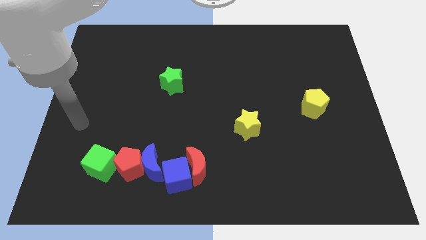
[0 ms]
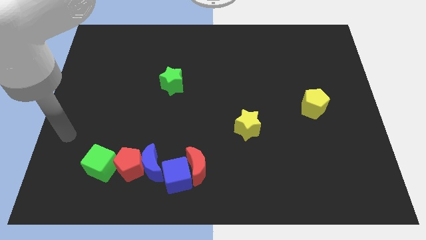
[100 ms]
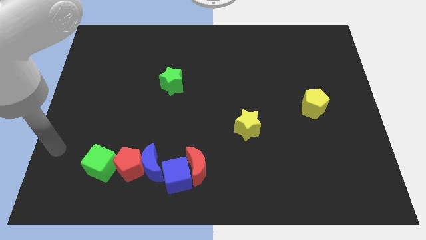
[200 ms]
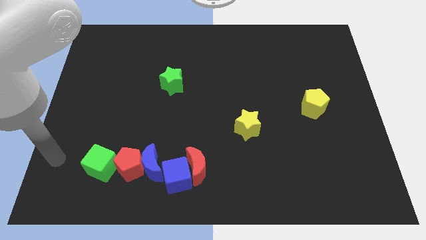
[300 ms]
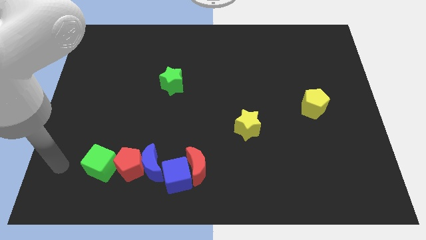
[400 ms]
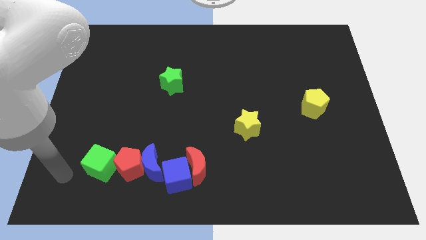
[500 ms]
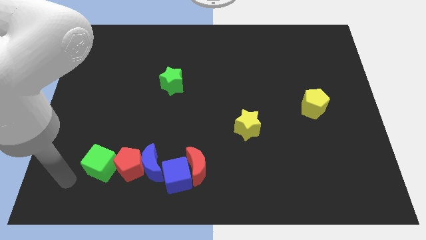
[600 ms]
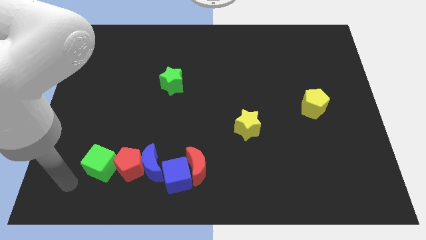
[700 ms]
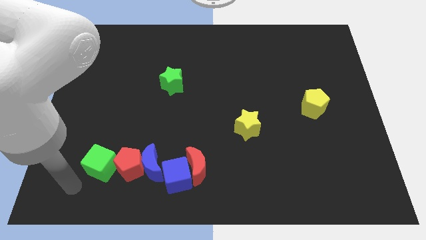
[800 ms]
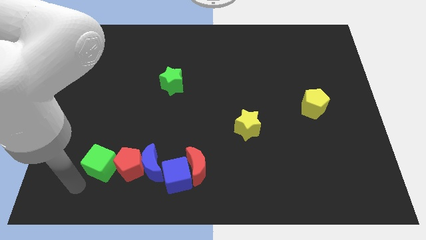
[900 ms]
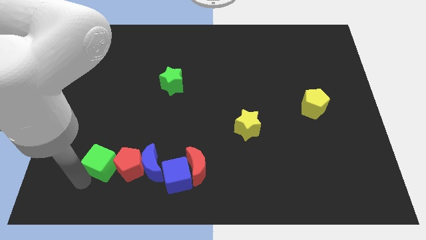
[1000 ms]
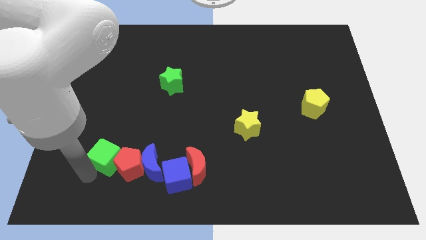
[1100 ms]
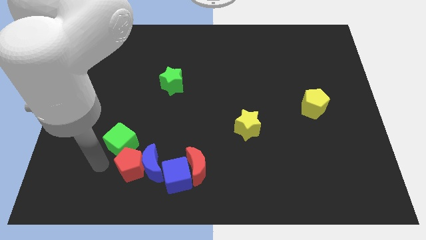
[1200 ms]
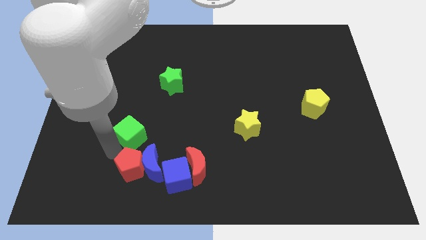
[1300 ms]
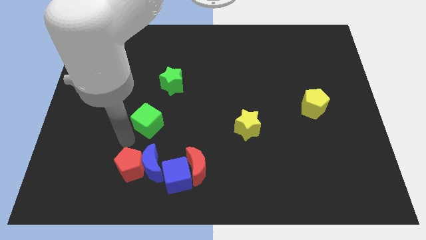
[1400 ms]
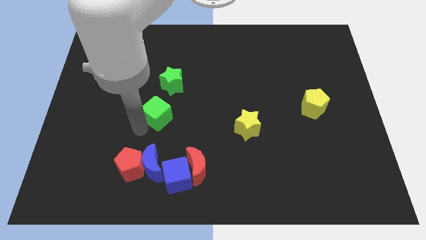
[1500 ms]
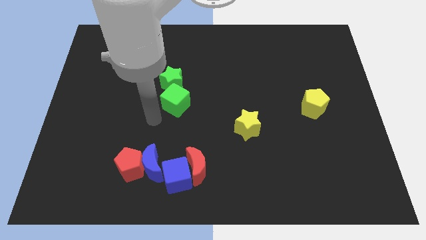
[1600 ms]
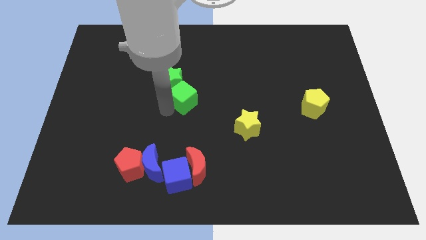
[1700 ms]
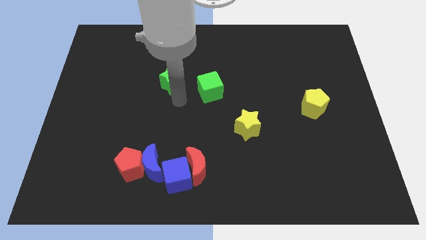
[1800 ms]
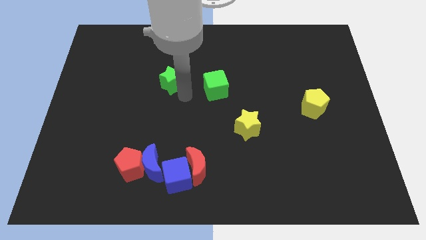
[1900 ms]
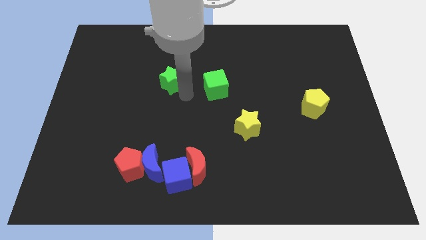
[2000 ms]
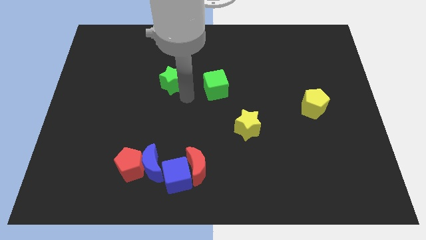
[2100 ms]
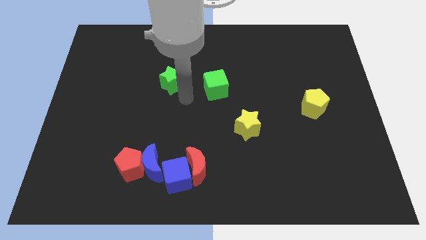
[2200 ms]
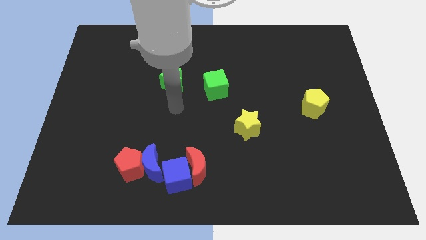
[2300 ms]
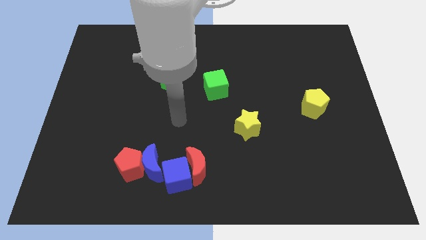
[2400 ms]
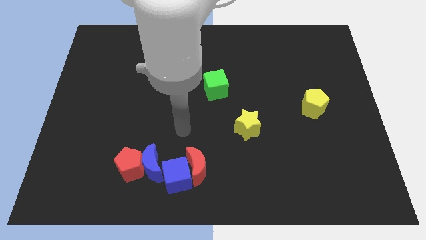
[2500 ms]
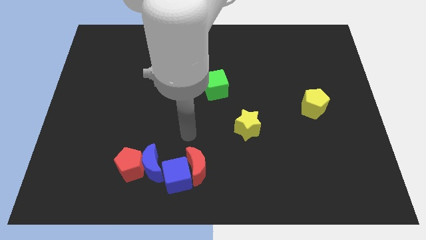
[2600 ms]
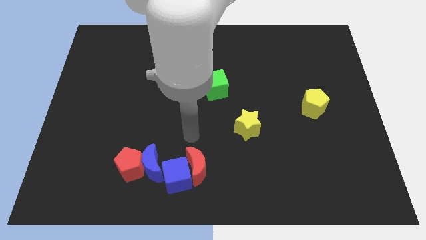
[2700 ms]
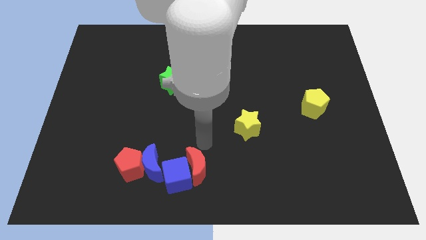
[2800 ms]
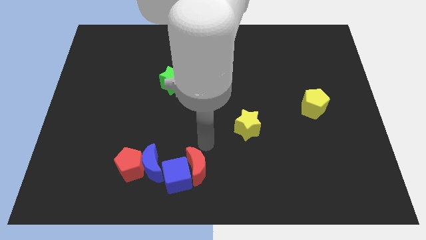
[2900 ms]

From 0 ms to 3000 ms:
move the green cube to the right of the green star

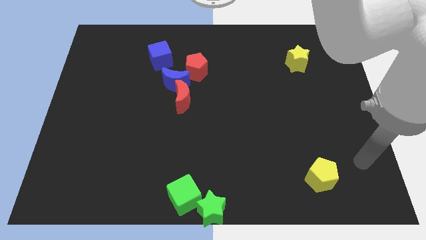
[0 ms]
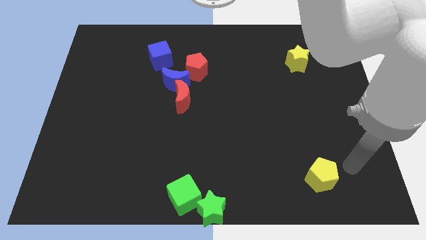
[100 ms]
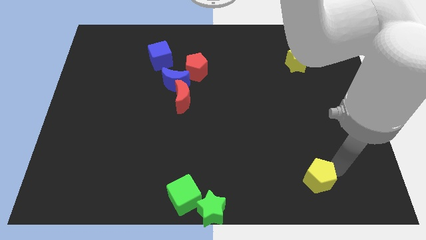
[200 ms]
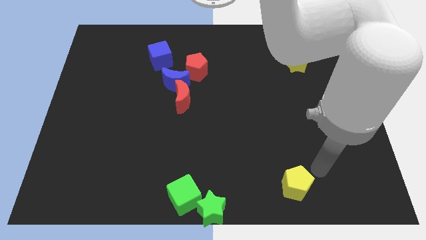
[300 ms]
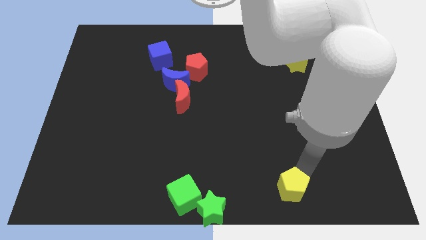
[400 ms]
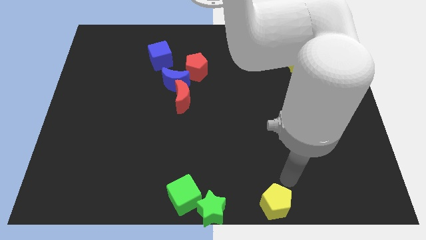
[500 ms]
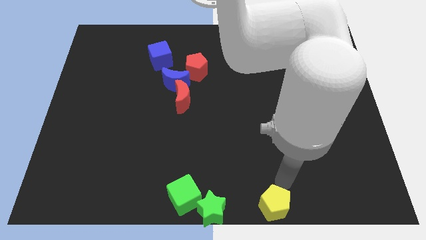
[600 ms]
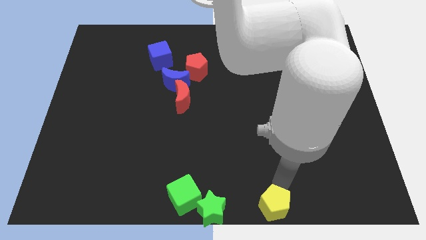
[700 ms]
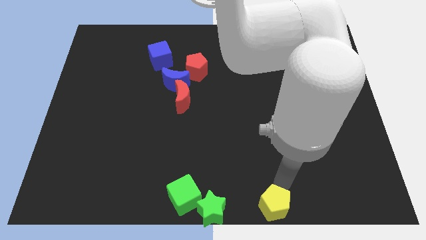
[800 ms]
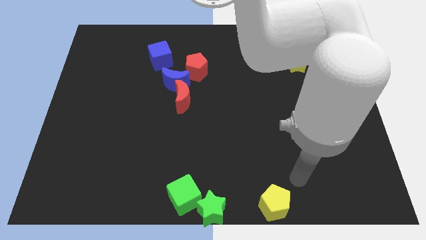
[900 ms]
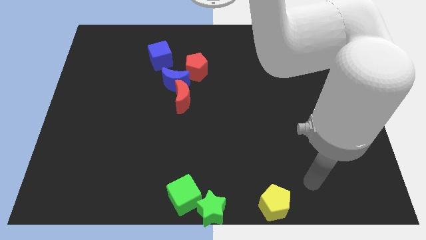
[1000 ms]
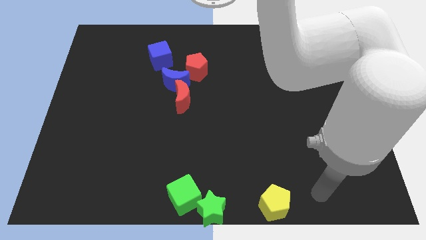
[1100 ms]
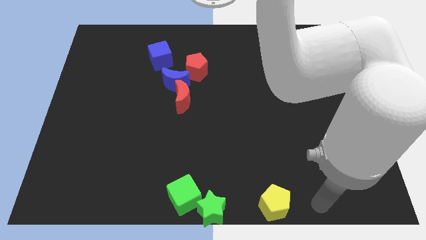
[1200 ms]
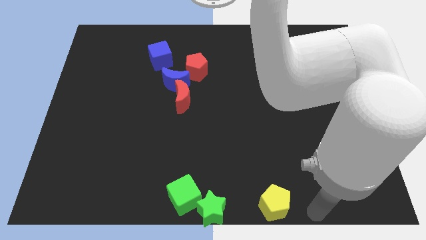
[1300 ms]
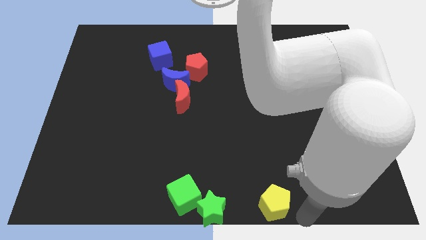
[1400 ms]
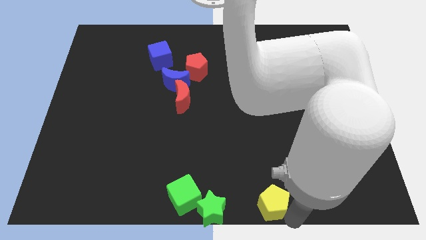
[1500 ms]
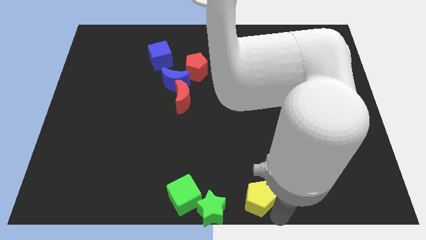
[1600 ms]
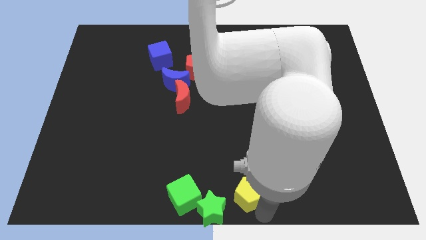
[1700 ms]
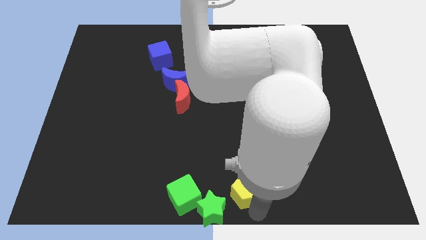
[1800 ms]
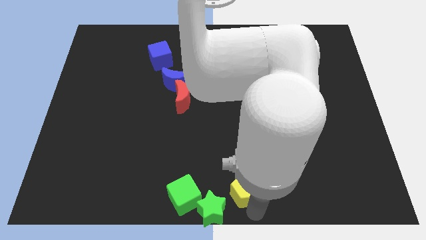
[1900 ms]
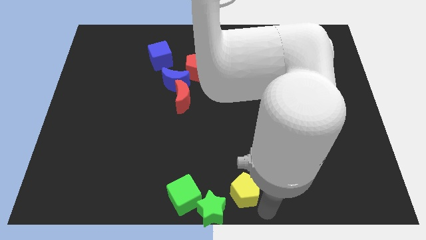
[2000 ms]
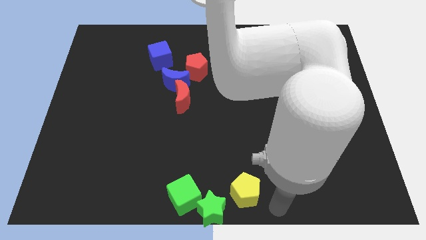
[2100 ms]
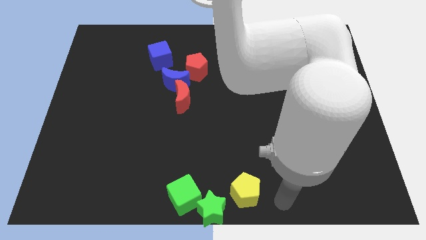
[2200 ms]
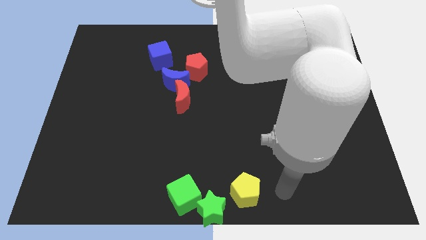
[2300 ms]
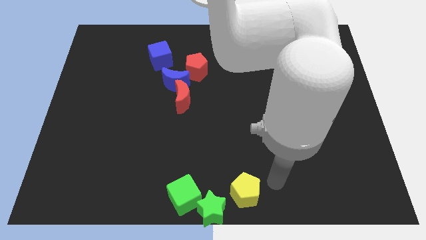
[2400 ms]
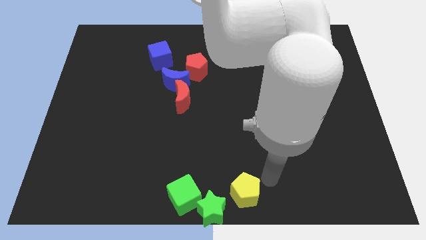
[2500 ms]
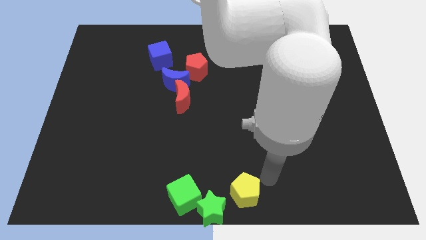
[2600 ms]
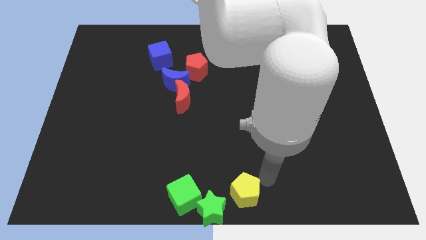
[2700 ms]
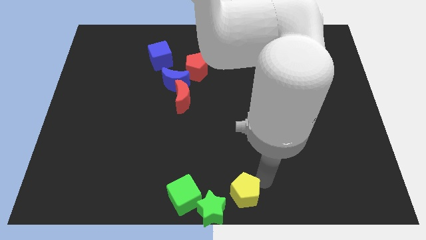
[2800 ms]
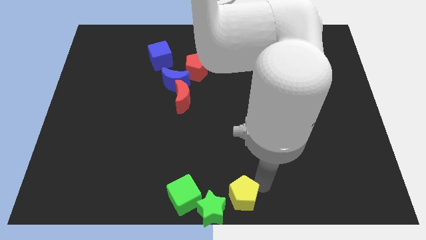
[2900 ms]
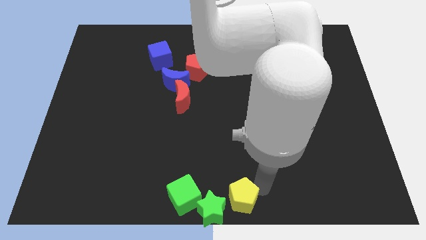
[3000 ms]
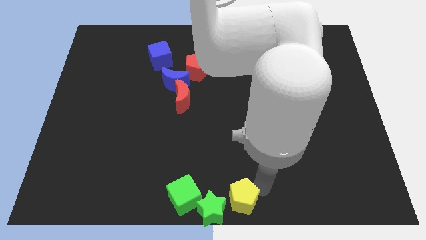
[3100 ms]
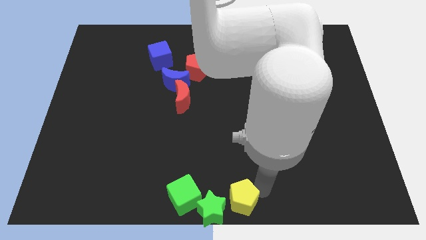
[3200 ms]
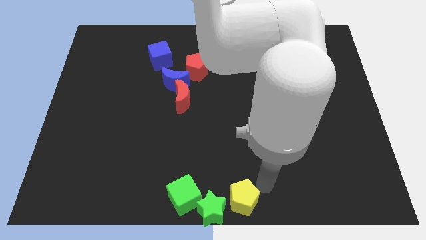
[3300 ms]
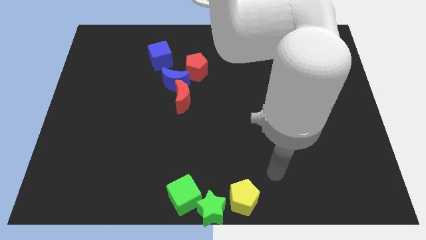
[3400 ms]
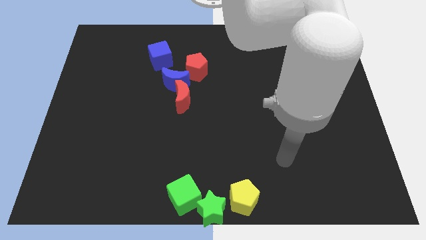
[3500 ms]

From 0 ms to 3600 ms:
push the yellow pentagon right to the green star

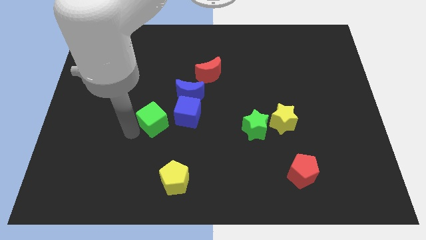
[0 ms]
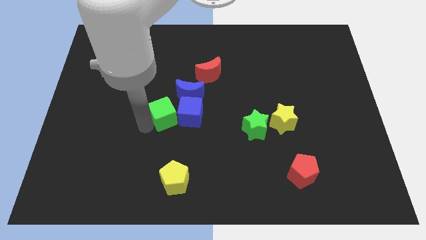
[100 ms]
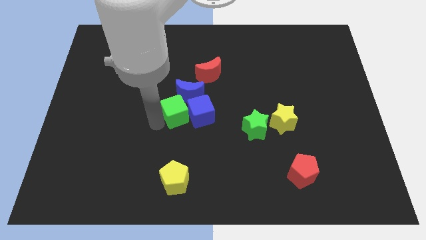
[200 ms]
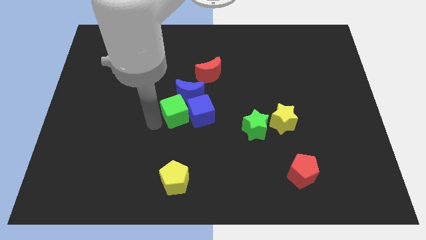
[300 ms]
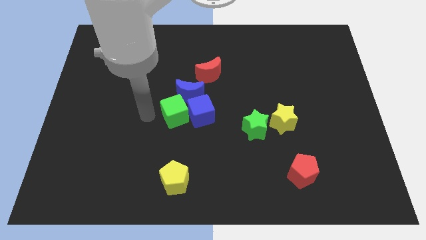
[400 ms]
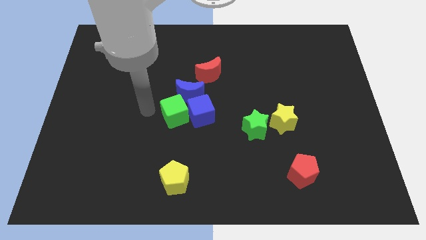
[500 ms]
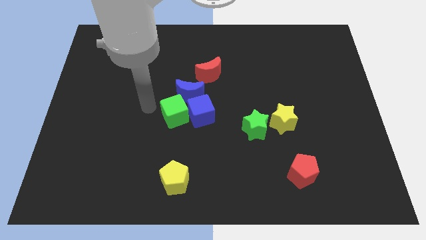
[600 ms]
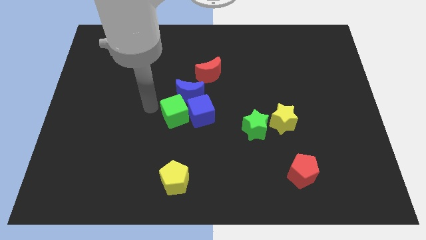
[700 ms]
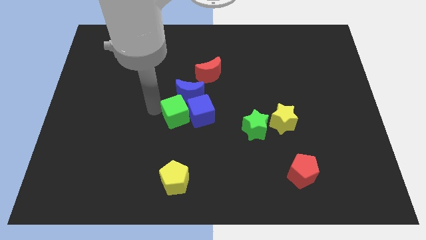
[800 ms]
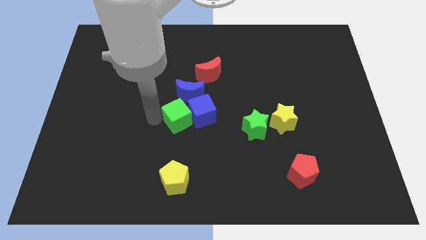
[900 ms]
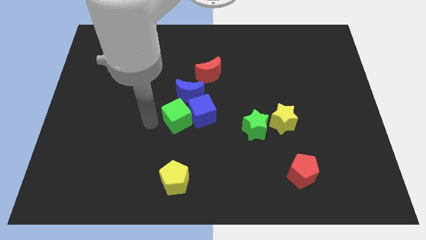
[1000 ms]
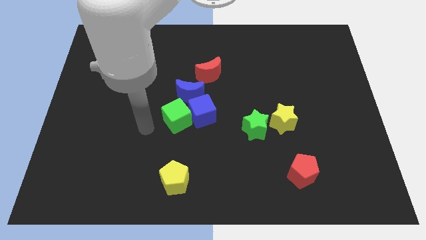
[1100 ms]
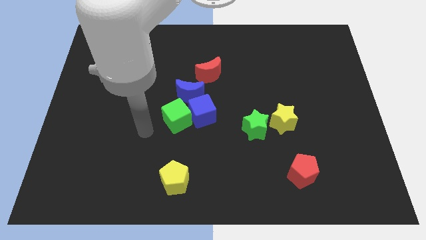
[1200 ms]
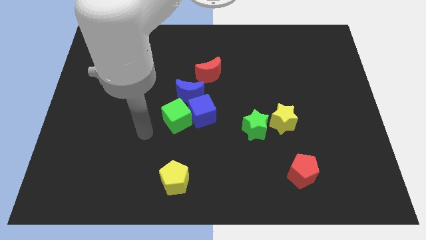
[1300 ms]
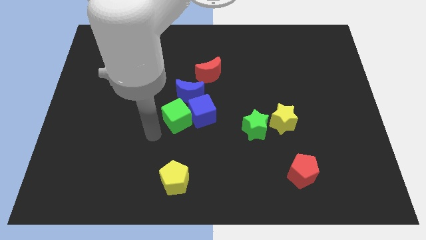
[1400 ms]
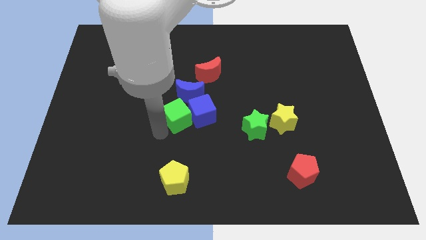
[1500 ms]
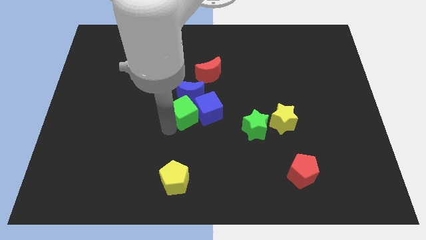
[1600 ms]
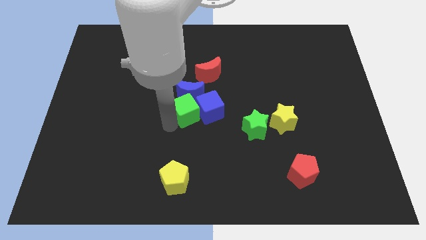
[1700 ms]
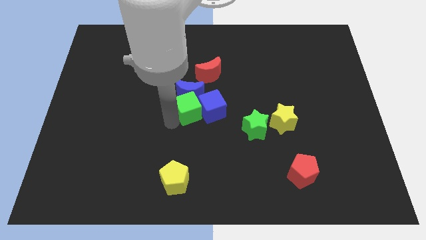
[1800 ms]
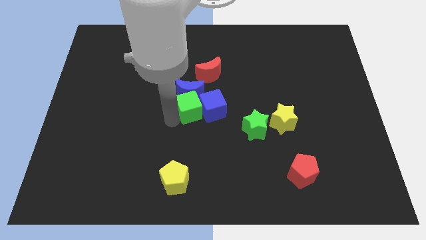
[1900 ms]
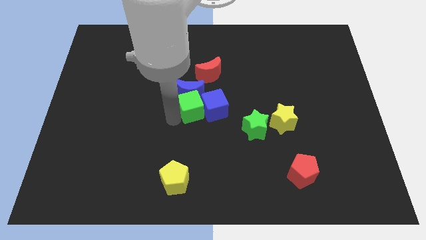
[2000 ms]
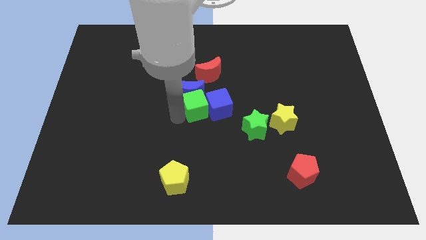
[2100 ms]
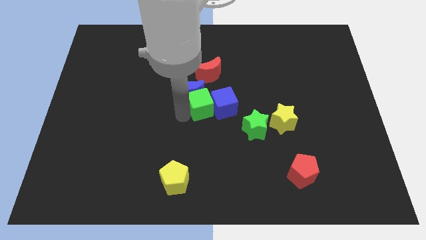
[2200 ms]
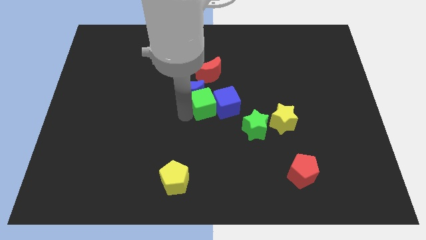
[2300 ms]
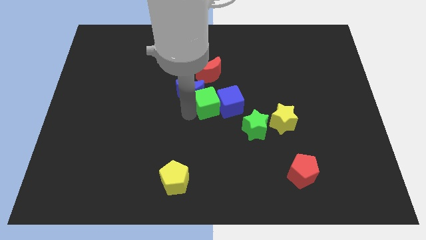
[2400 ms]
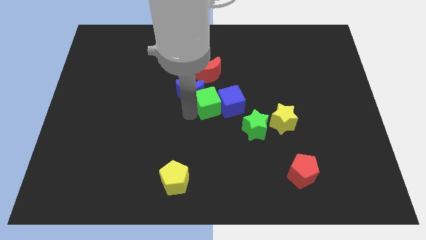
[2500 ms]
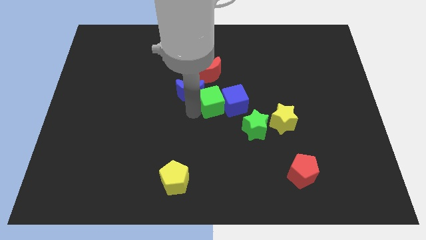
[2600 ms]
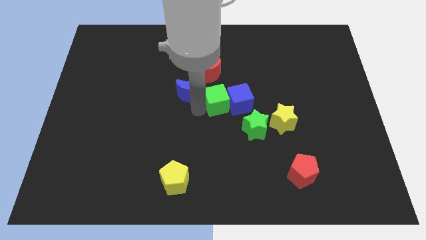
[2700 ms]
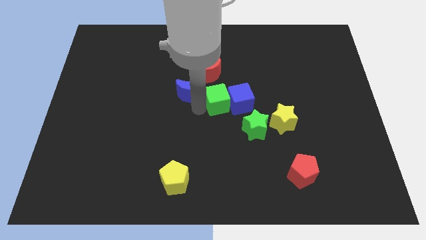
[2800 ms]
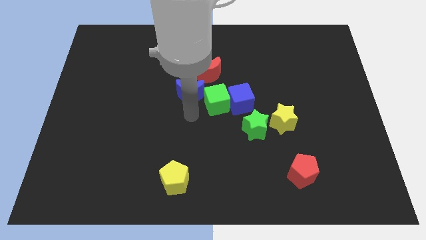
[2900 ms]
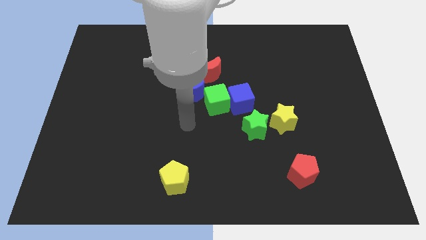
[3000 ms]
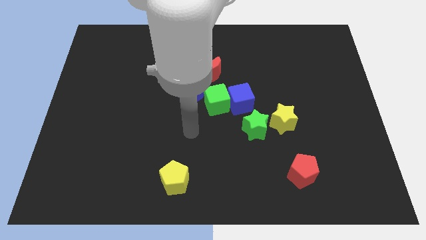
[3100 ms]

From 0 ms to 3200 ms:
push the green cube along with the blue cube to the right of the blue crescent
